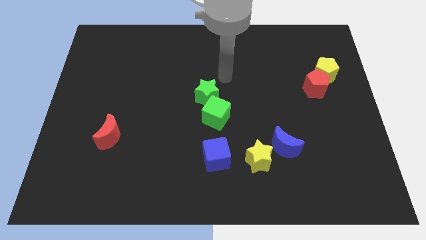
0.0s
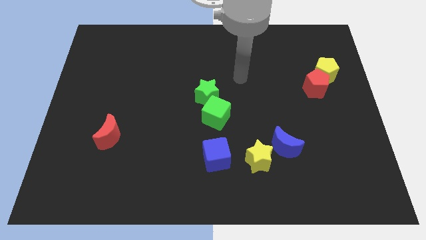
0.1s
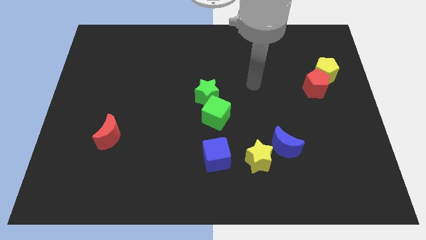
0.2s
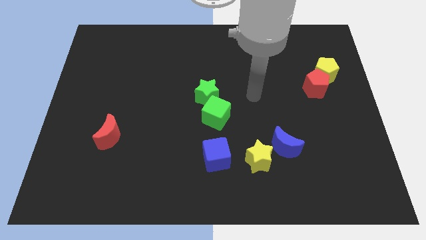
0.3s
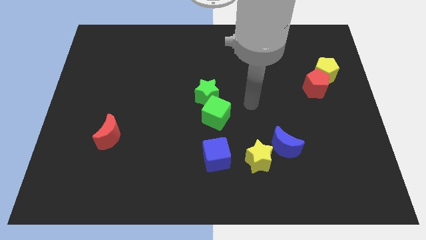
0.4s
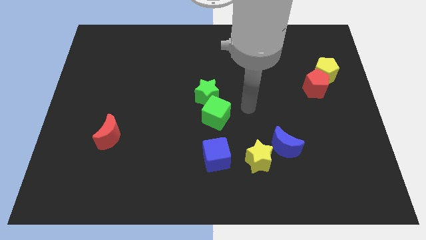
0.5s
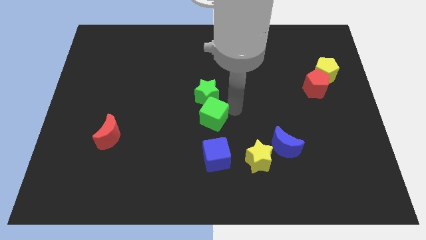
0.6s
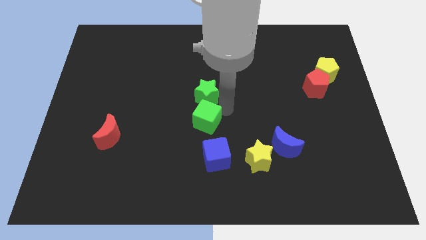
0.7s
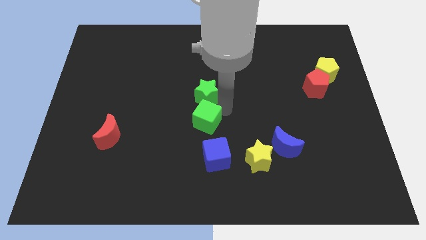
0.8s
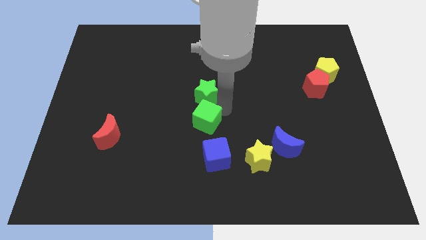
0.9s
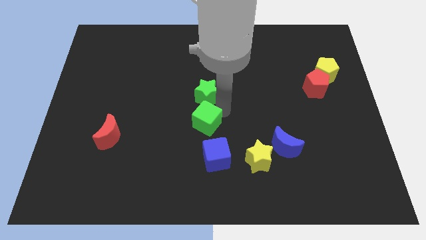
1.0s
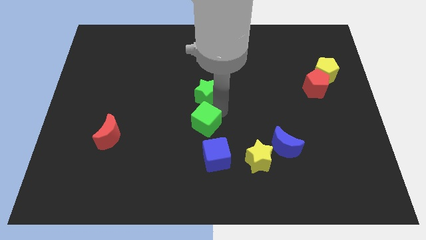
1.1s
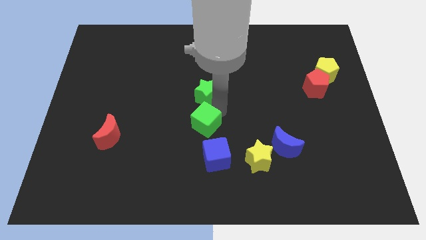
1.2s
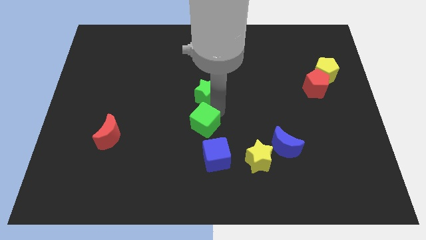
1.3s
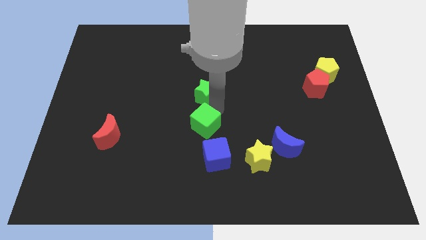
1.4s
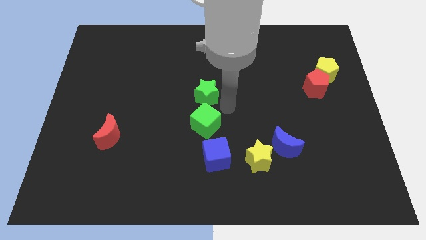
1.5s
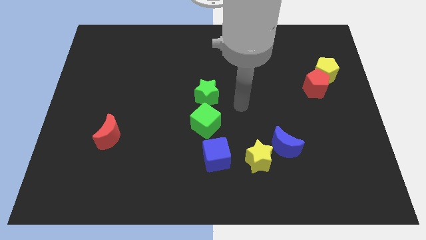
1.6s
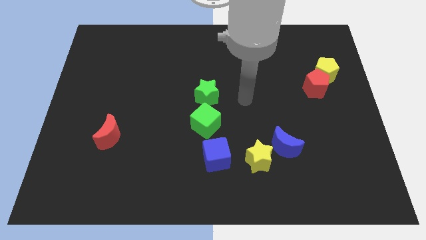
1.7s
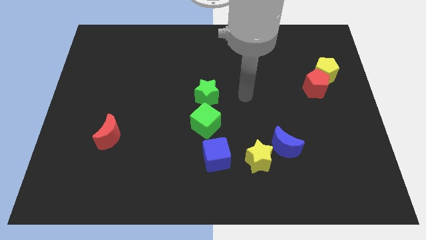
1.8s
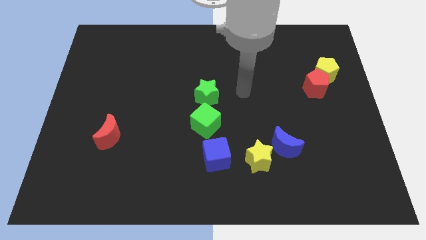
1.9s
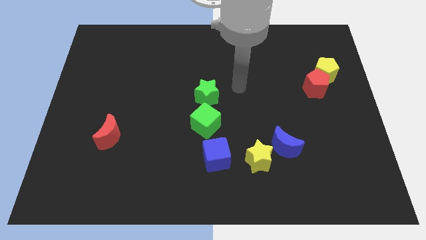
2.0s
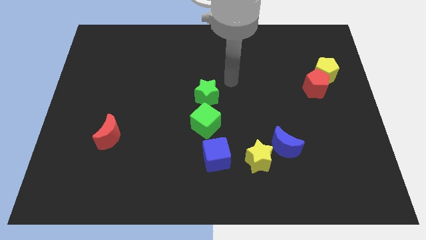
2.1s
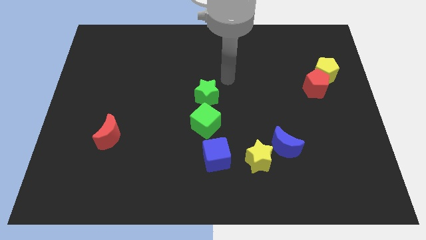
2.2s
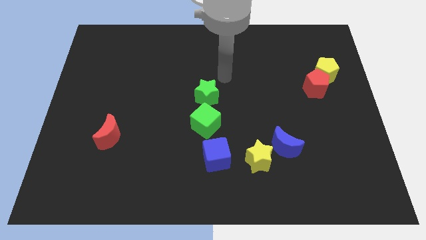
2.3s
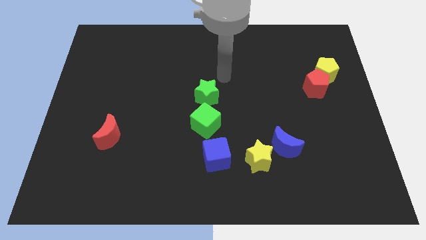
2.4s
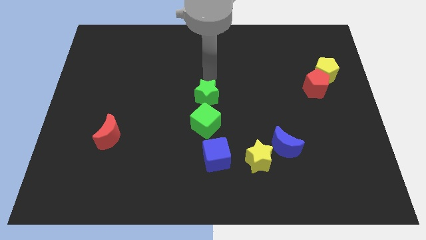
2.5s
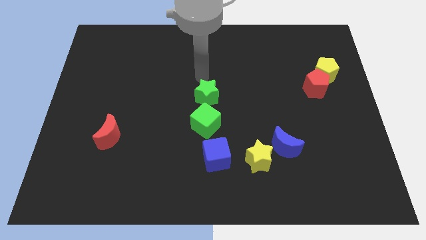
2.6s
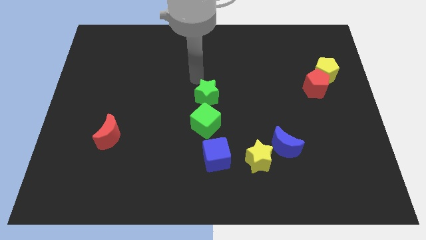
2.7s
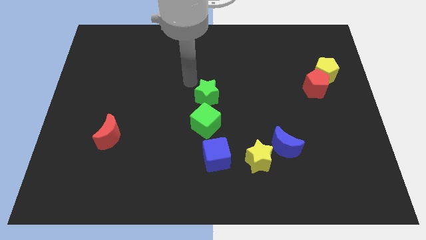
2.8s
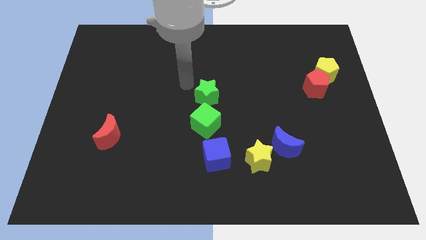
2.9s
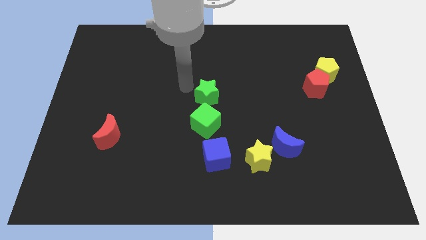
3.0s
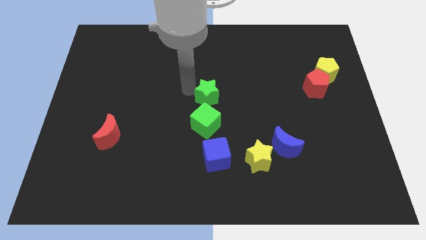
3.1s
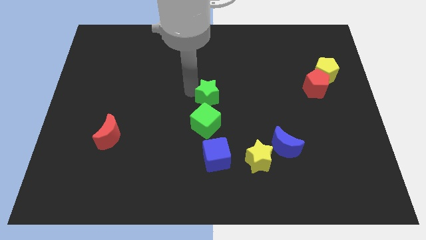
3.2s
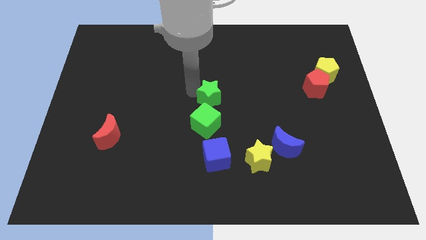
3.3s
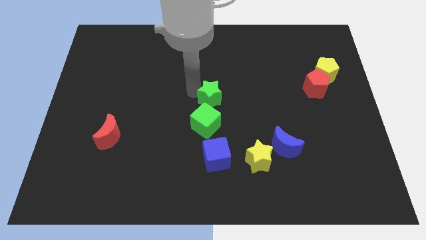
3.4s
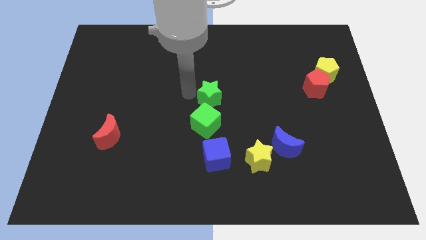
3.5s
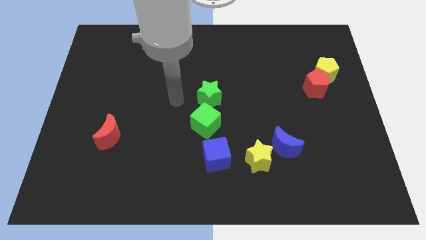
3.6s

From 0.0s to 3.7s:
place the green cube and green star in a vertical line

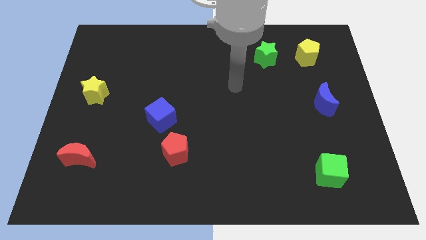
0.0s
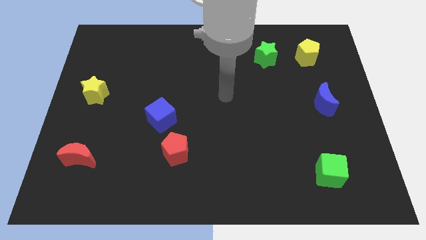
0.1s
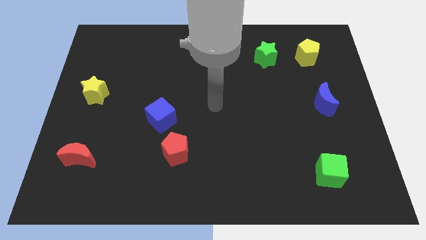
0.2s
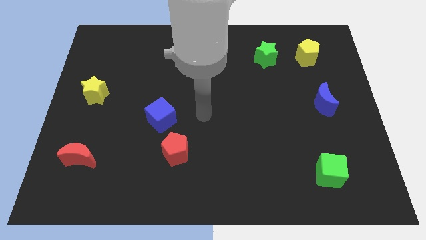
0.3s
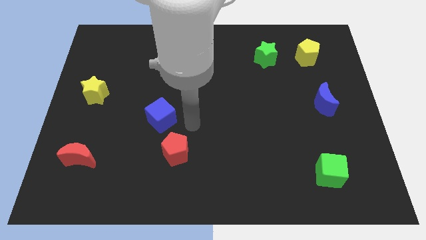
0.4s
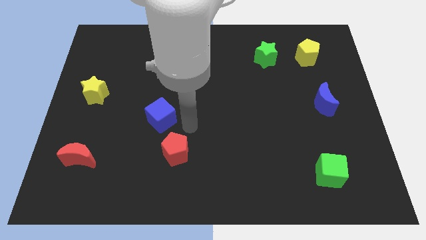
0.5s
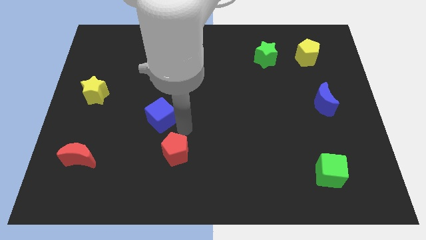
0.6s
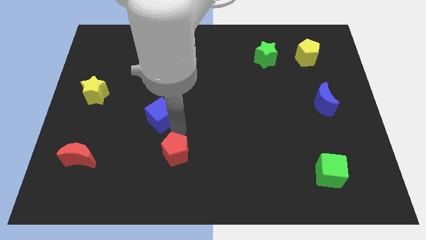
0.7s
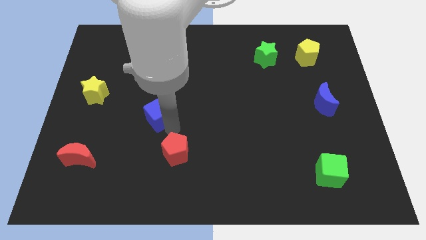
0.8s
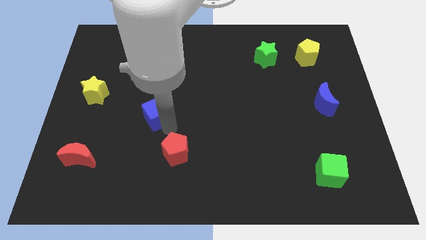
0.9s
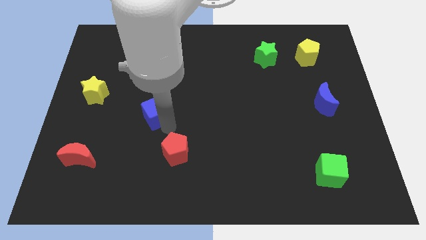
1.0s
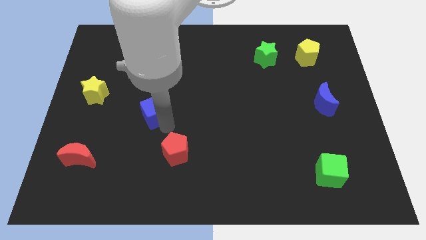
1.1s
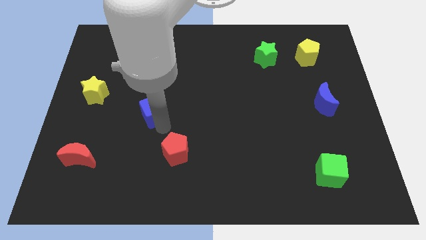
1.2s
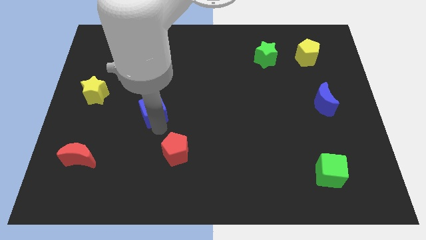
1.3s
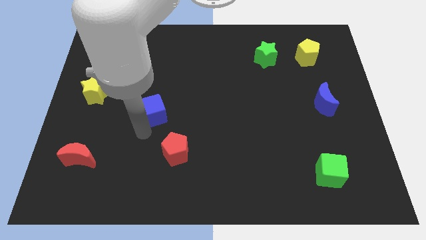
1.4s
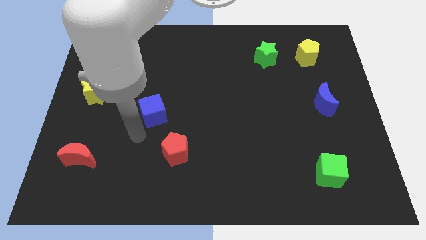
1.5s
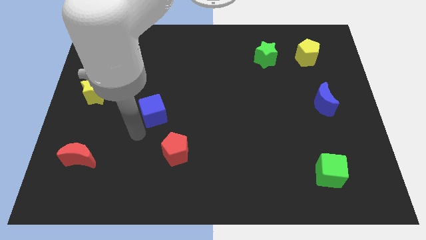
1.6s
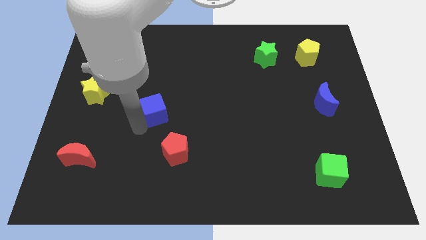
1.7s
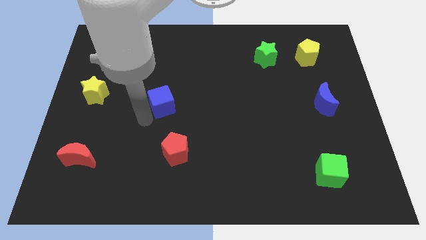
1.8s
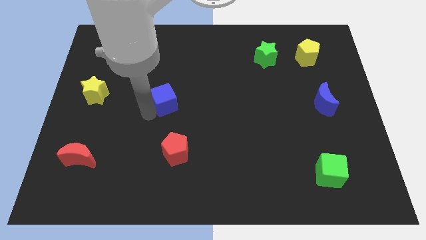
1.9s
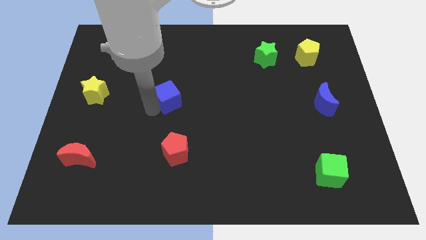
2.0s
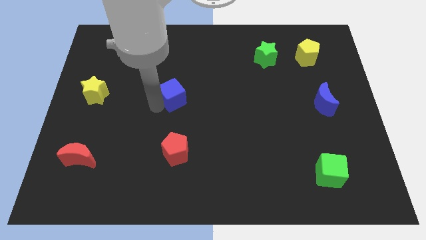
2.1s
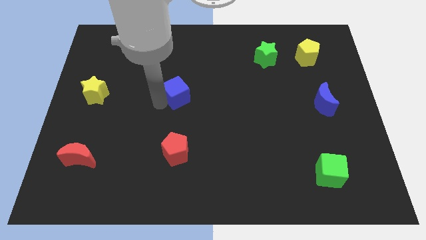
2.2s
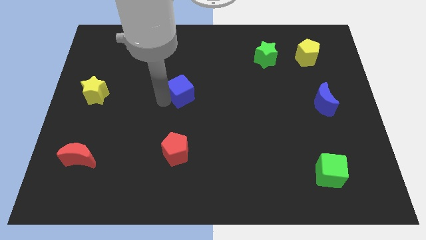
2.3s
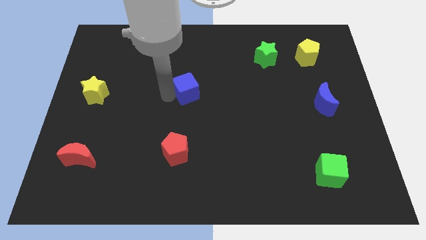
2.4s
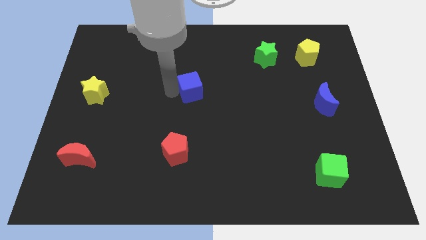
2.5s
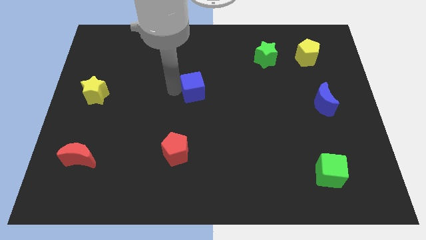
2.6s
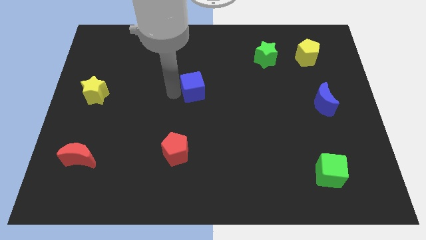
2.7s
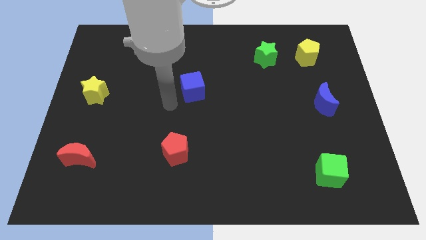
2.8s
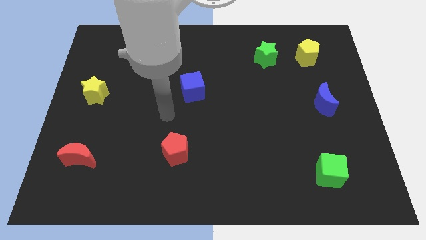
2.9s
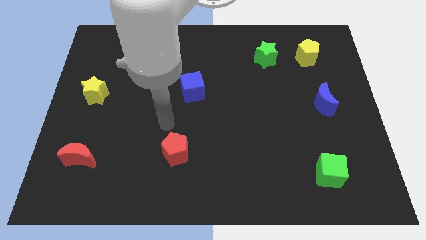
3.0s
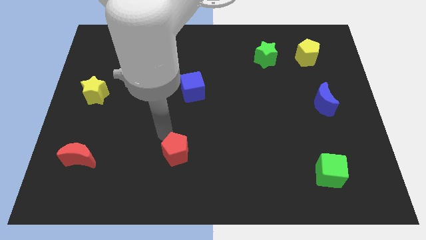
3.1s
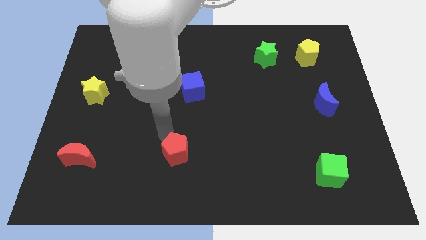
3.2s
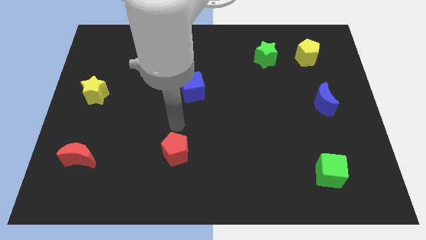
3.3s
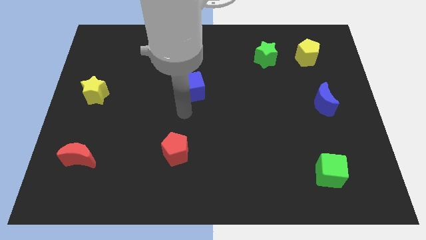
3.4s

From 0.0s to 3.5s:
slide the blue cube parallel right to the yellow star

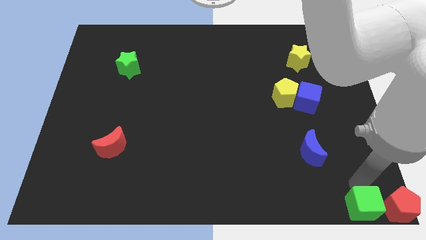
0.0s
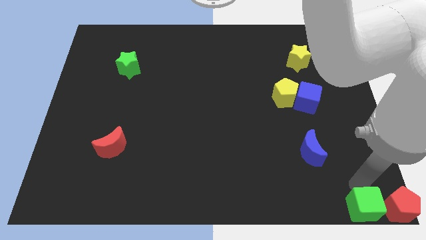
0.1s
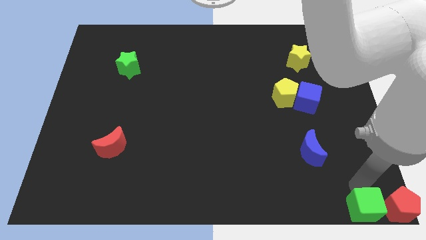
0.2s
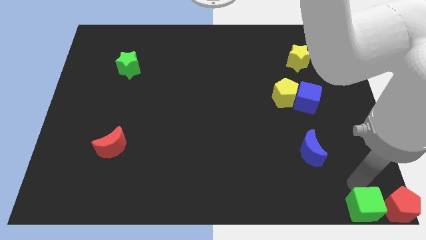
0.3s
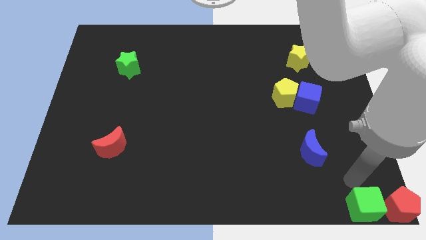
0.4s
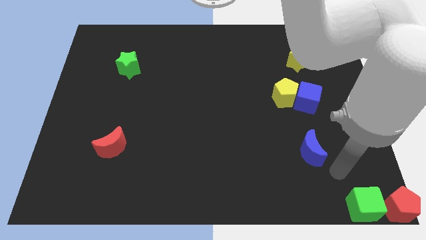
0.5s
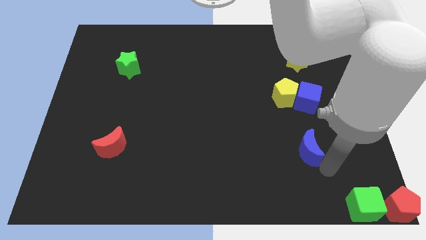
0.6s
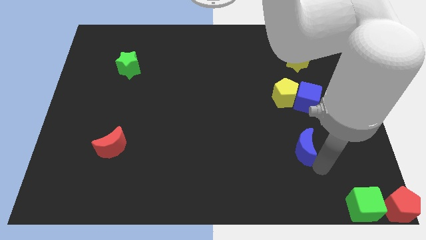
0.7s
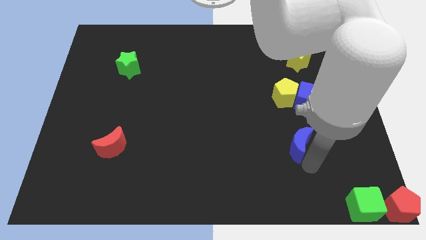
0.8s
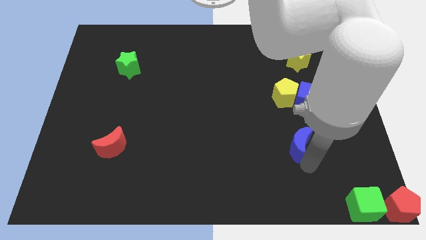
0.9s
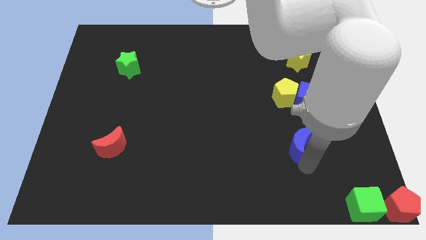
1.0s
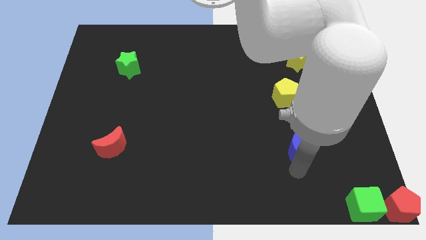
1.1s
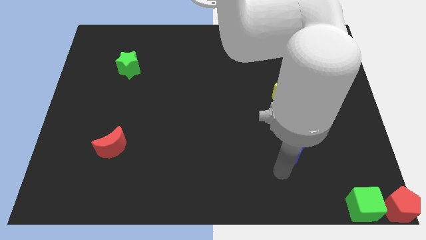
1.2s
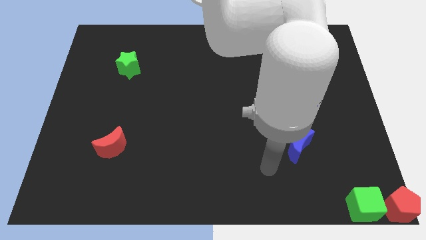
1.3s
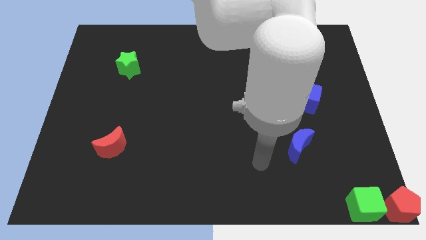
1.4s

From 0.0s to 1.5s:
move the blue moon slightly to the left

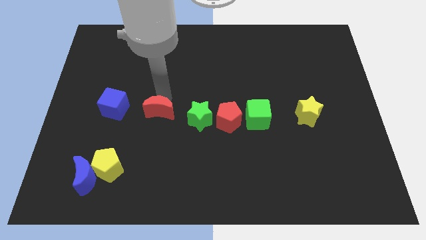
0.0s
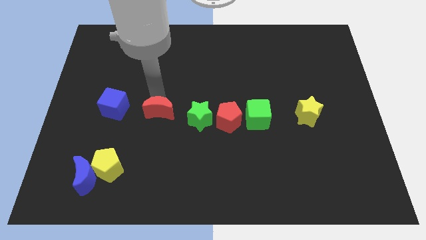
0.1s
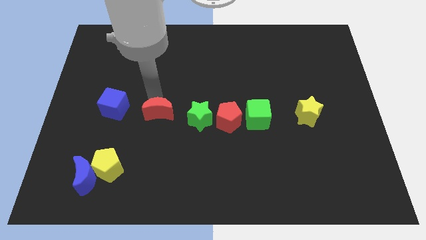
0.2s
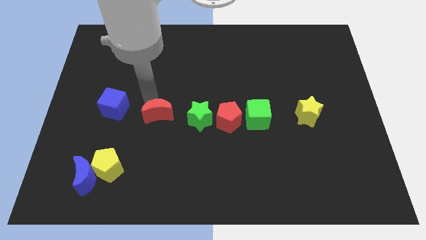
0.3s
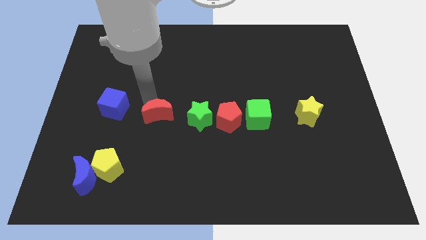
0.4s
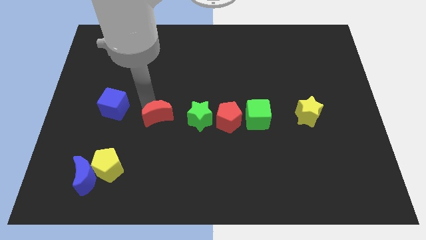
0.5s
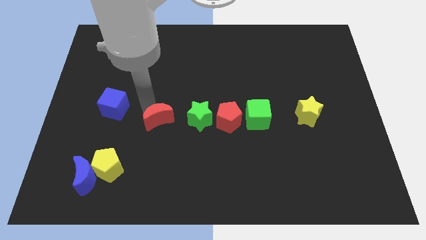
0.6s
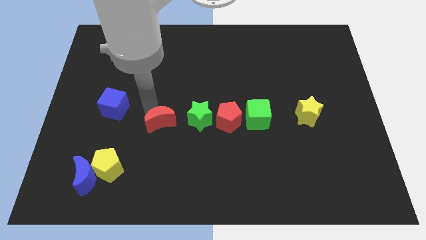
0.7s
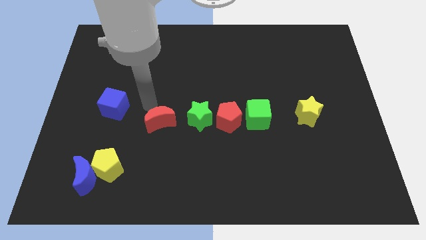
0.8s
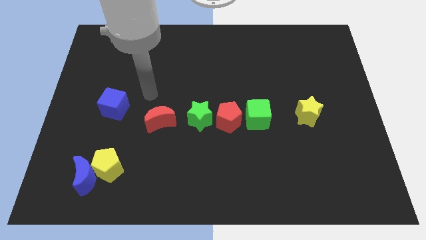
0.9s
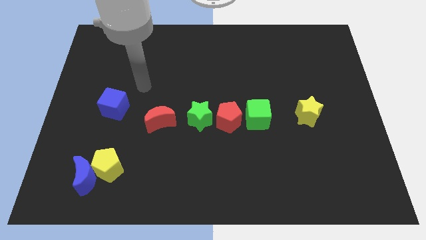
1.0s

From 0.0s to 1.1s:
slide red moon slightly down
